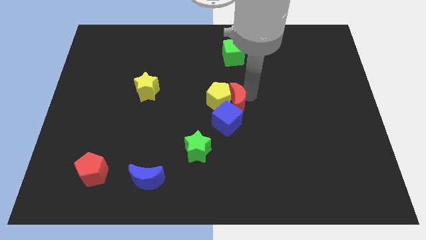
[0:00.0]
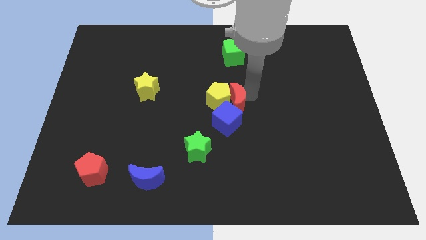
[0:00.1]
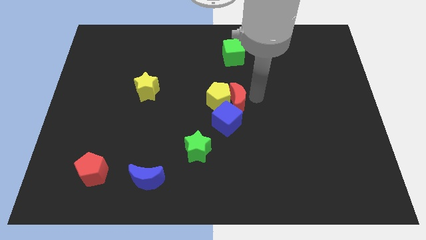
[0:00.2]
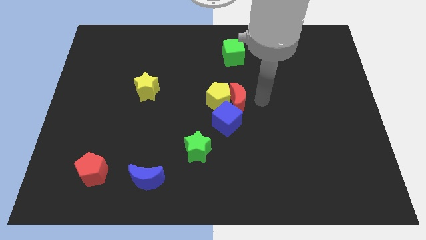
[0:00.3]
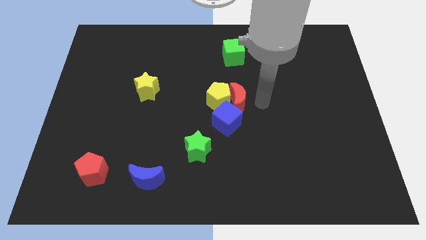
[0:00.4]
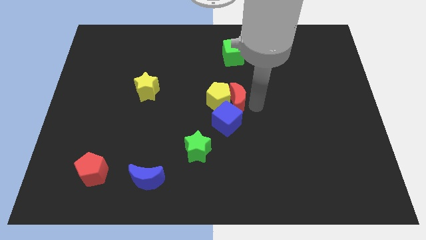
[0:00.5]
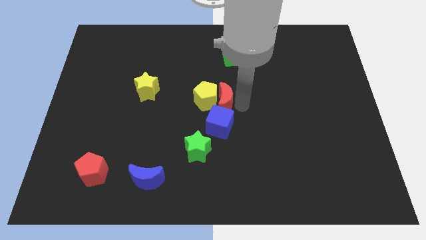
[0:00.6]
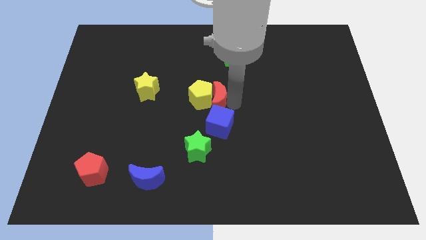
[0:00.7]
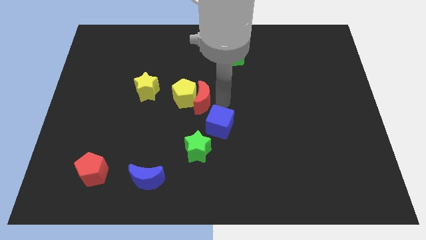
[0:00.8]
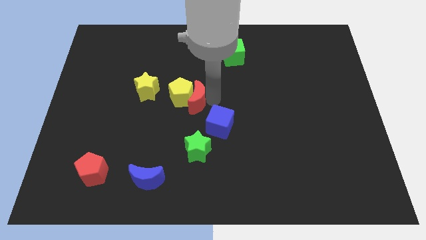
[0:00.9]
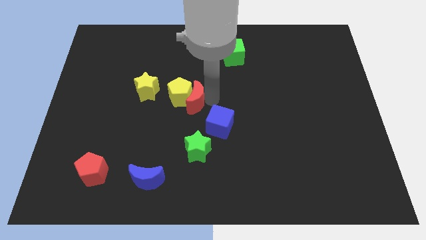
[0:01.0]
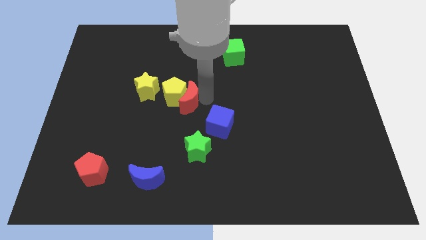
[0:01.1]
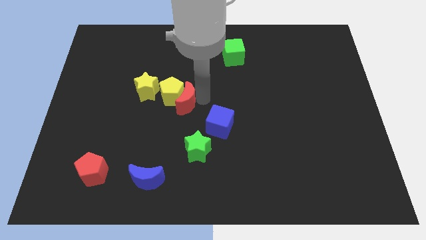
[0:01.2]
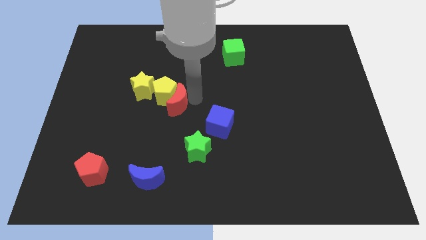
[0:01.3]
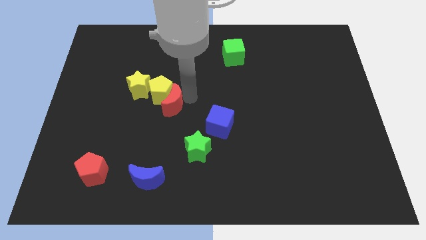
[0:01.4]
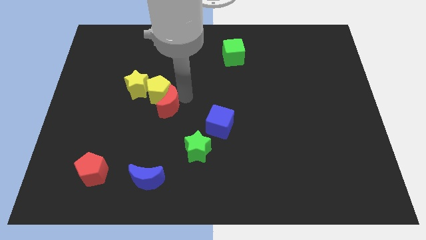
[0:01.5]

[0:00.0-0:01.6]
separate yellow pentagon and the red moon from the blue cube

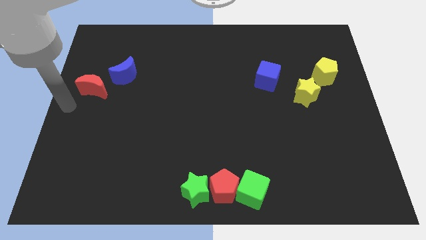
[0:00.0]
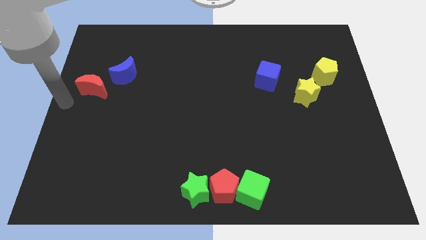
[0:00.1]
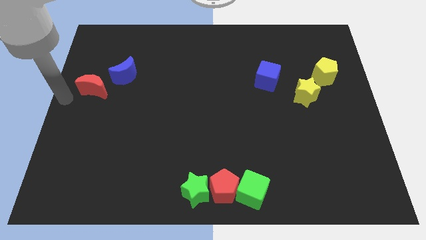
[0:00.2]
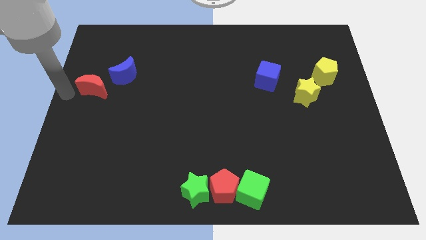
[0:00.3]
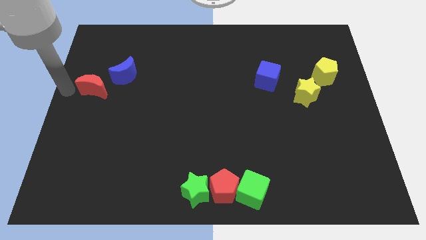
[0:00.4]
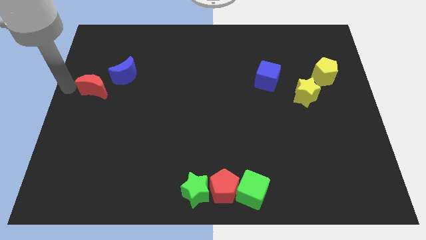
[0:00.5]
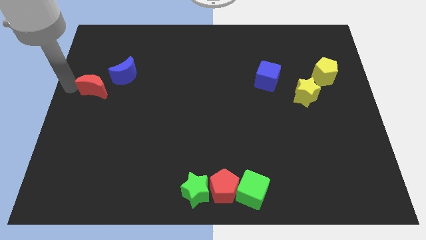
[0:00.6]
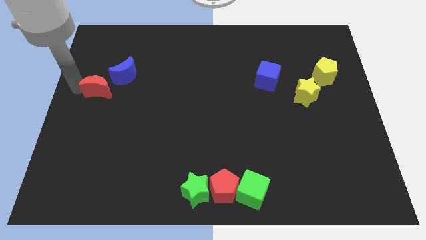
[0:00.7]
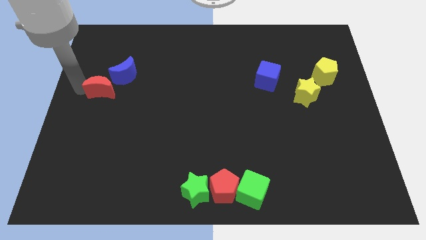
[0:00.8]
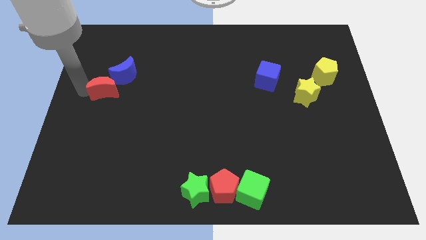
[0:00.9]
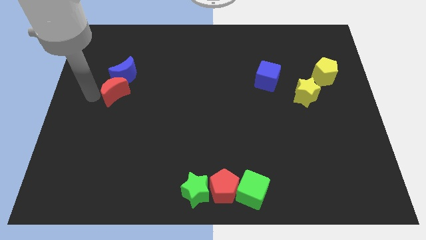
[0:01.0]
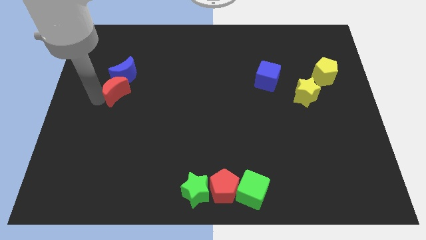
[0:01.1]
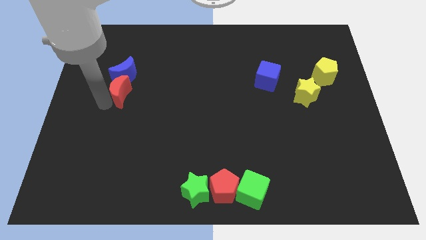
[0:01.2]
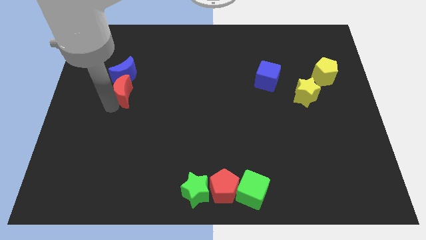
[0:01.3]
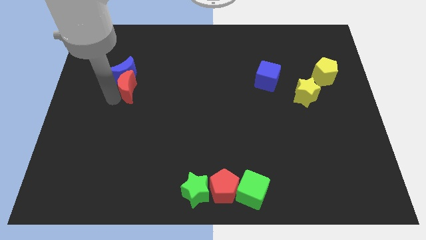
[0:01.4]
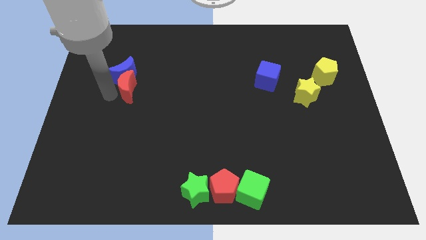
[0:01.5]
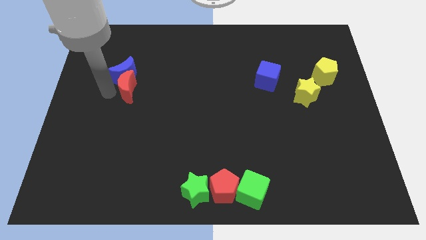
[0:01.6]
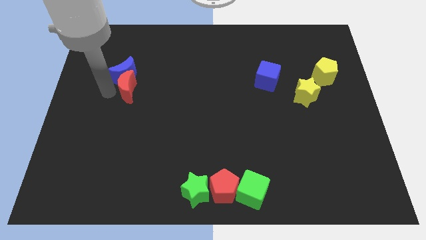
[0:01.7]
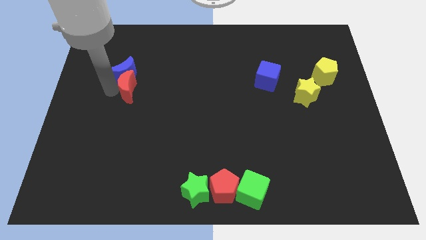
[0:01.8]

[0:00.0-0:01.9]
push the red moon to the bottom right side of the blue moon

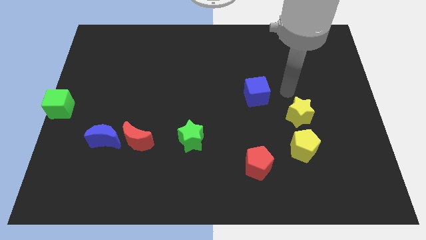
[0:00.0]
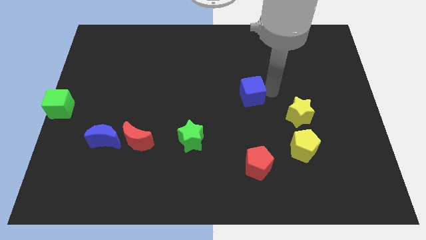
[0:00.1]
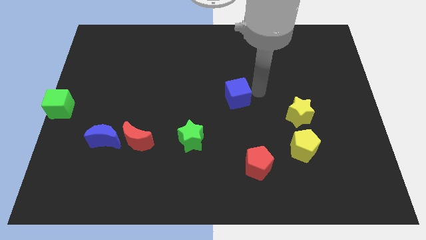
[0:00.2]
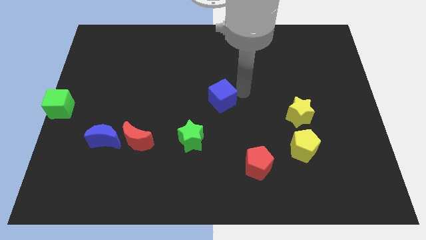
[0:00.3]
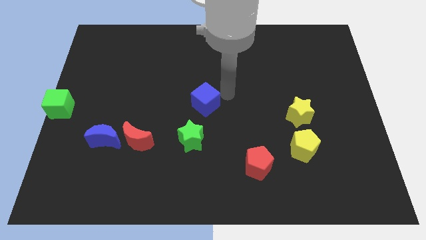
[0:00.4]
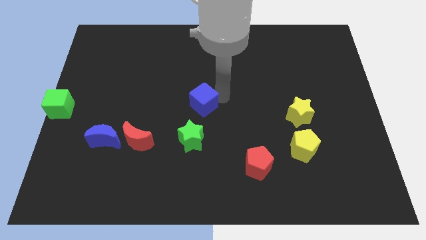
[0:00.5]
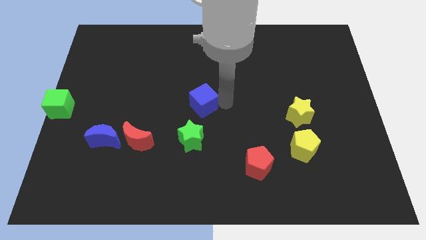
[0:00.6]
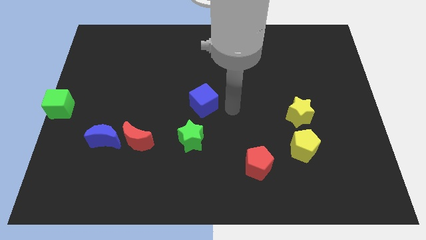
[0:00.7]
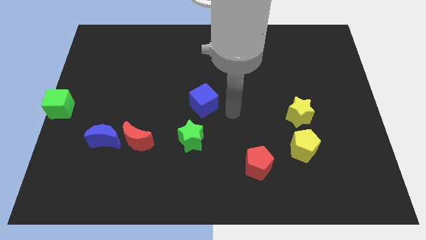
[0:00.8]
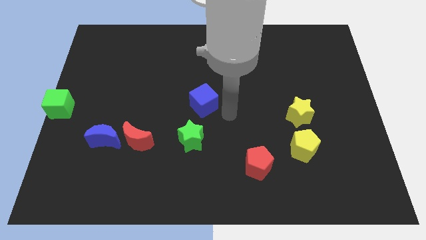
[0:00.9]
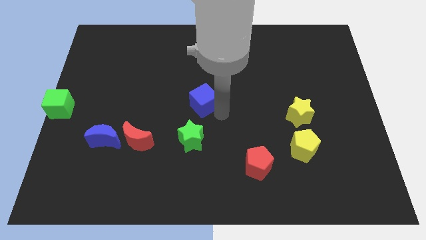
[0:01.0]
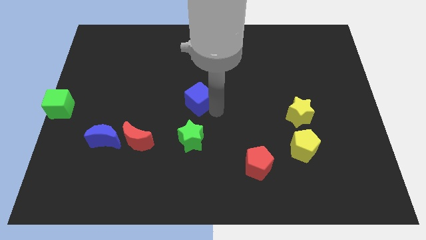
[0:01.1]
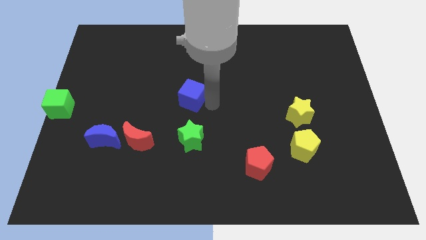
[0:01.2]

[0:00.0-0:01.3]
move the blue cube to the top of the green star

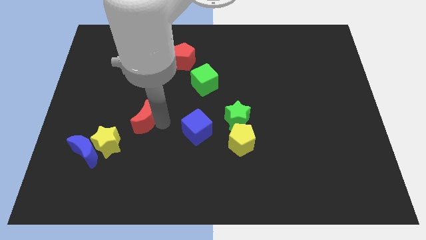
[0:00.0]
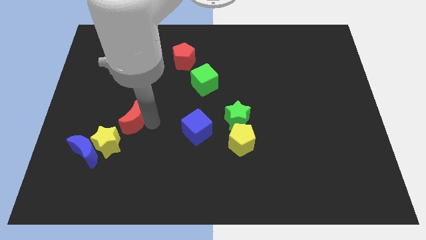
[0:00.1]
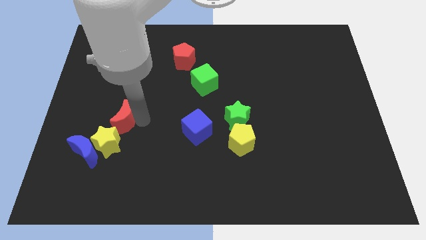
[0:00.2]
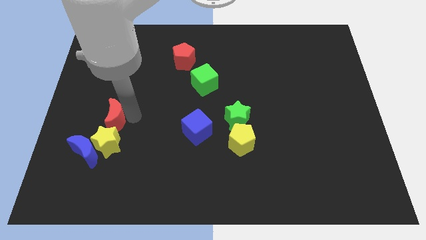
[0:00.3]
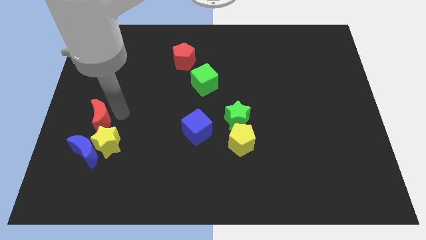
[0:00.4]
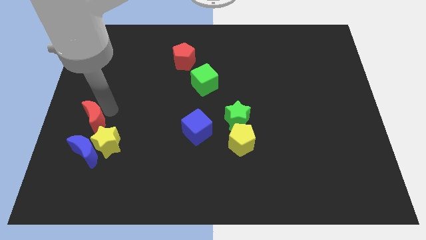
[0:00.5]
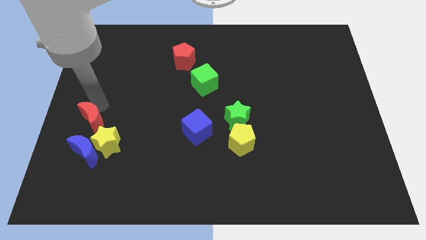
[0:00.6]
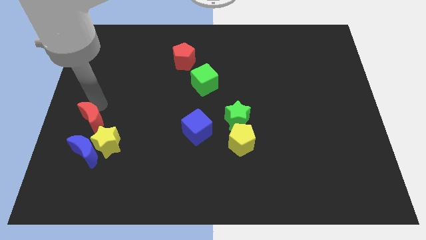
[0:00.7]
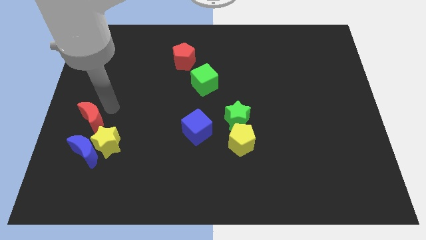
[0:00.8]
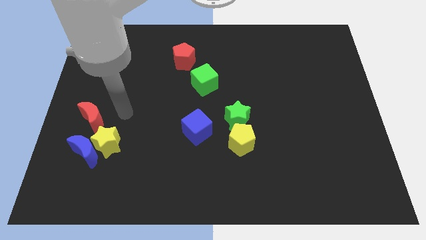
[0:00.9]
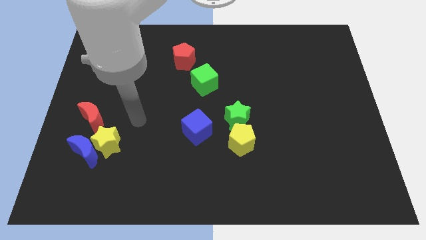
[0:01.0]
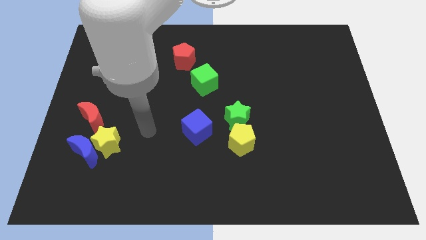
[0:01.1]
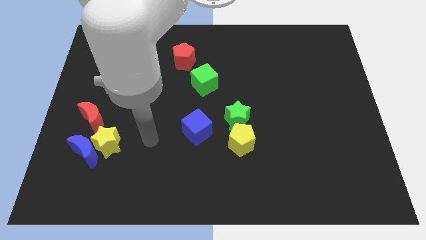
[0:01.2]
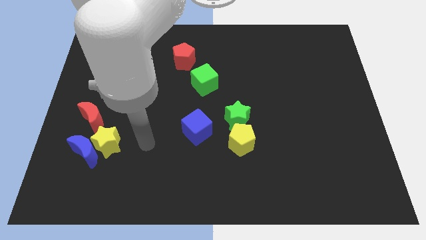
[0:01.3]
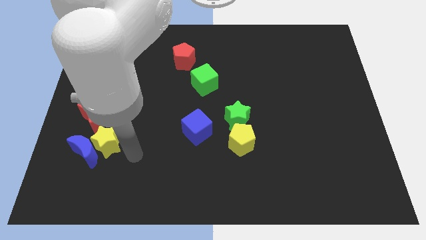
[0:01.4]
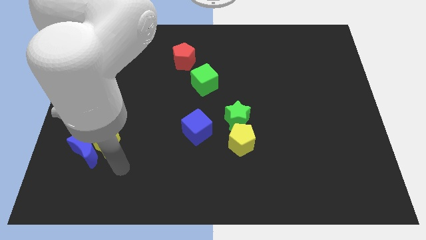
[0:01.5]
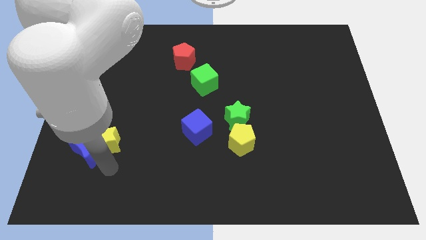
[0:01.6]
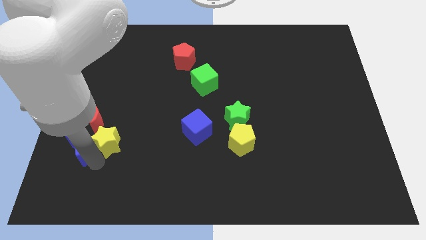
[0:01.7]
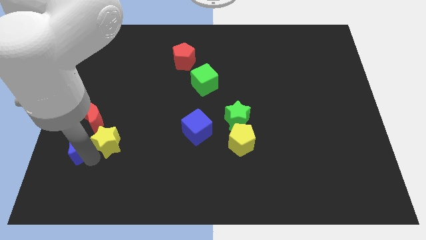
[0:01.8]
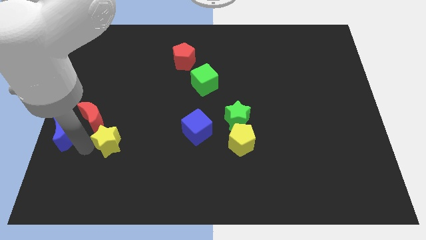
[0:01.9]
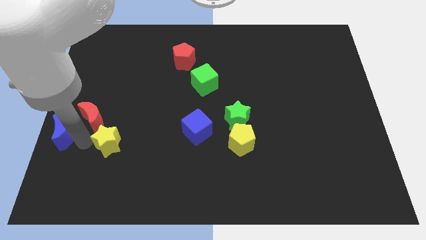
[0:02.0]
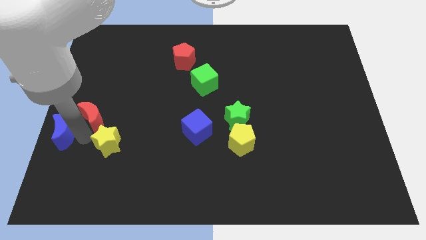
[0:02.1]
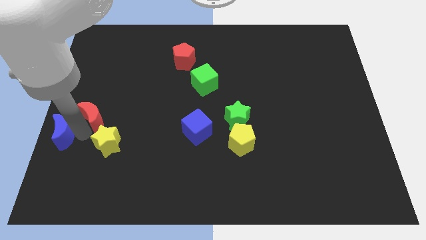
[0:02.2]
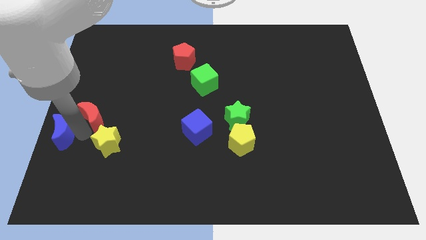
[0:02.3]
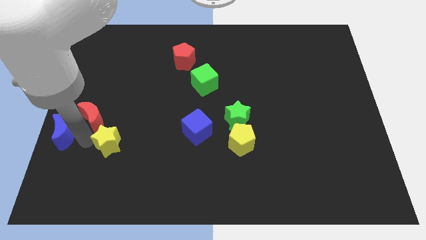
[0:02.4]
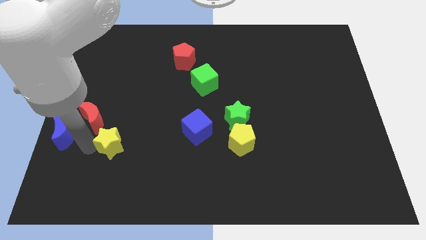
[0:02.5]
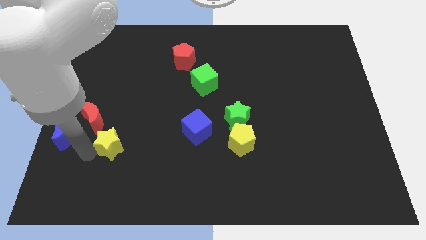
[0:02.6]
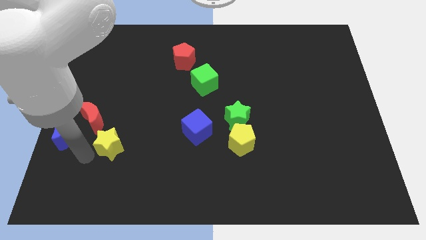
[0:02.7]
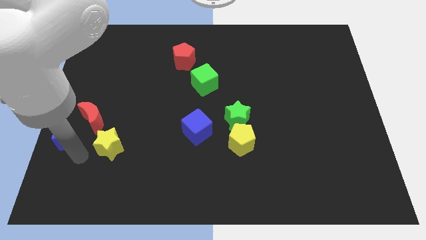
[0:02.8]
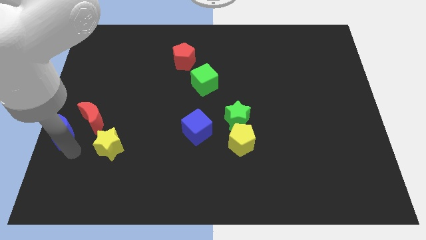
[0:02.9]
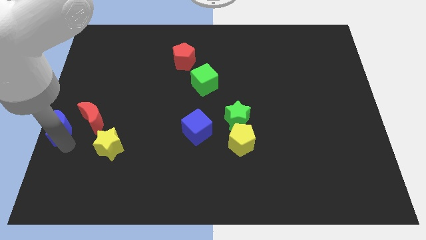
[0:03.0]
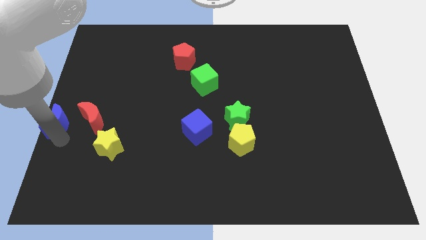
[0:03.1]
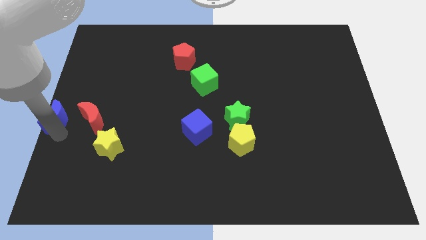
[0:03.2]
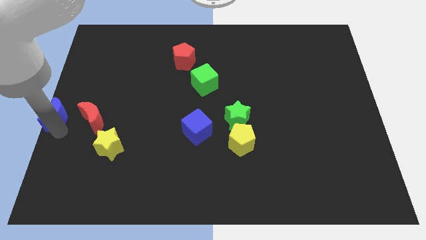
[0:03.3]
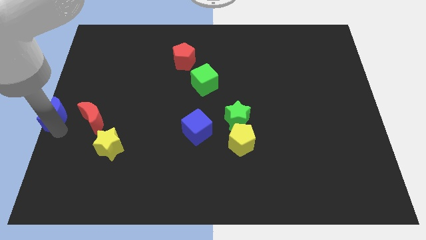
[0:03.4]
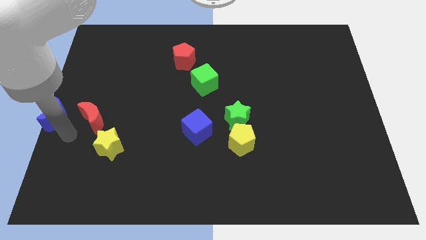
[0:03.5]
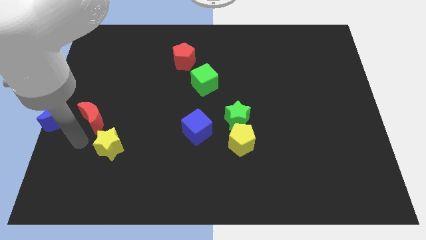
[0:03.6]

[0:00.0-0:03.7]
push the red crescent towards the top left side of the yellow star

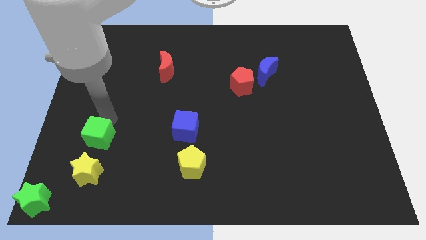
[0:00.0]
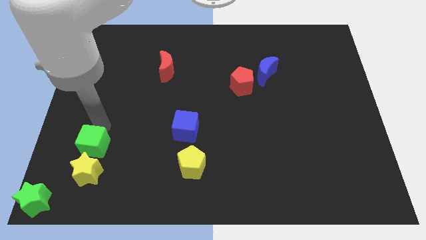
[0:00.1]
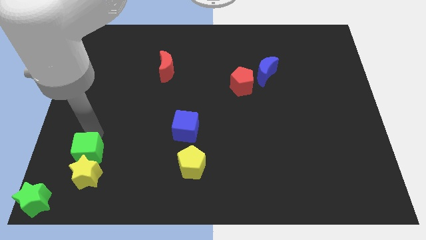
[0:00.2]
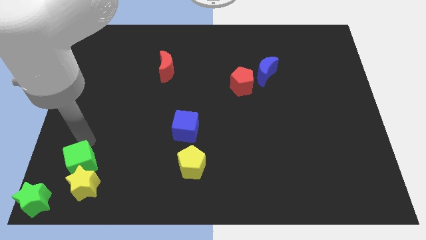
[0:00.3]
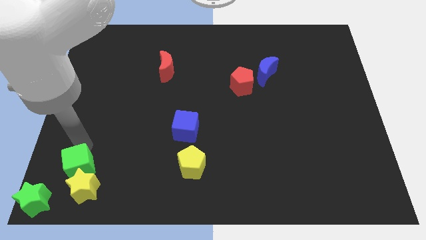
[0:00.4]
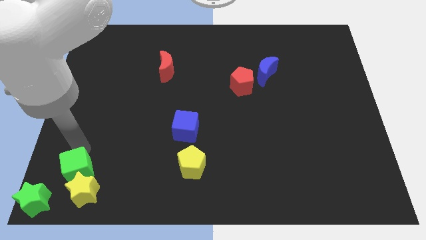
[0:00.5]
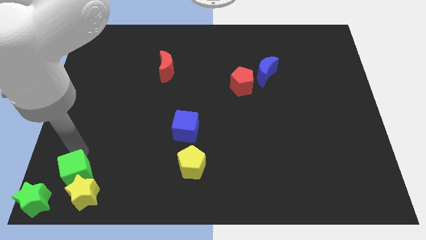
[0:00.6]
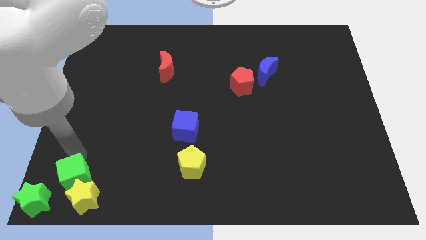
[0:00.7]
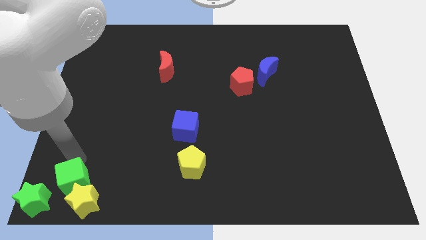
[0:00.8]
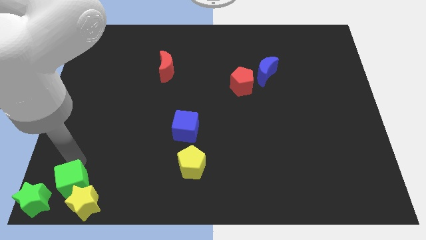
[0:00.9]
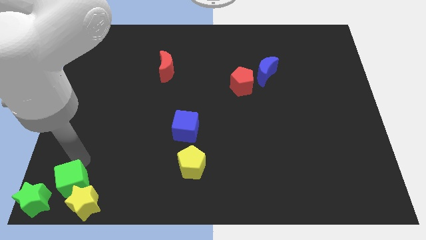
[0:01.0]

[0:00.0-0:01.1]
push green cube and yellow star to the bottom left of the board
